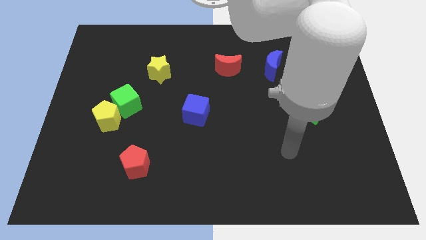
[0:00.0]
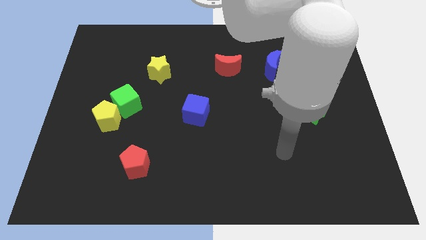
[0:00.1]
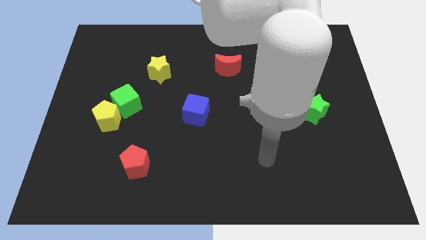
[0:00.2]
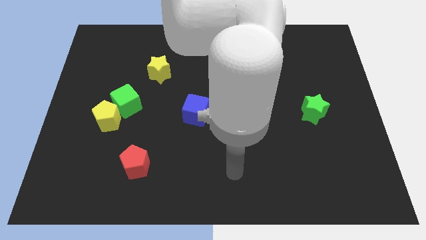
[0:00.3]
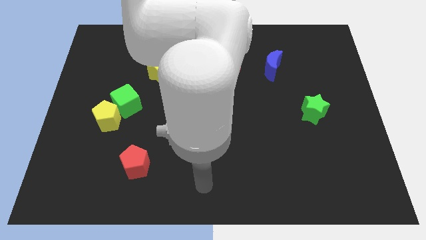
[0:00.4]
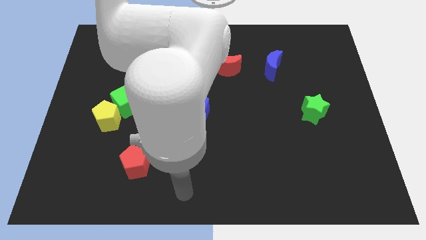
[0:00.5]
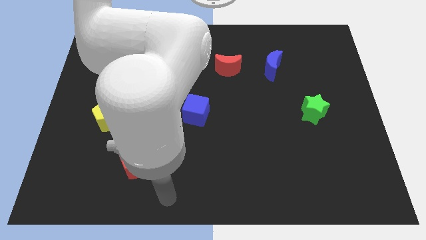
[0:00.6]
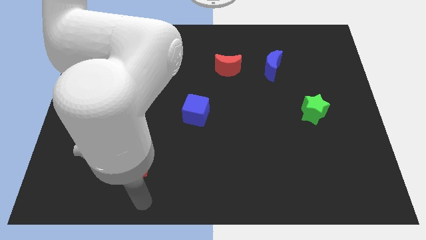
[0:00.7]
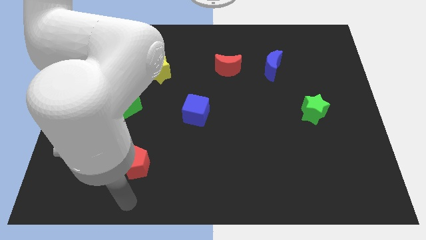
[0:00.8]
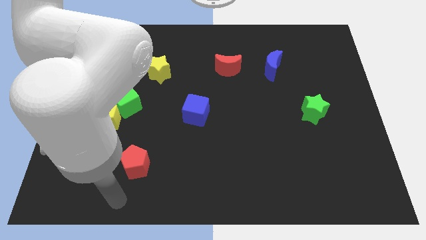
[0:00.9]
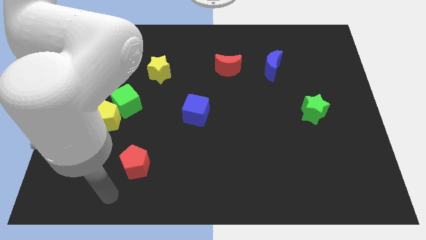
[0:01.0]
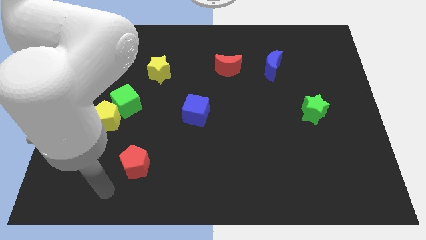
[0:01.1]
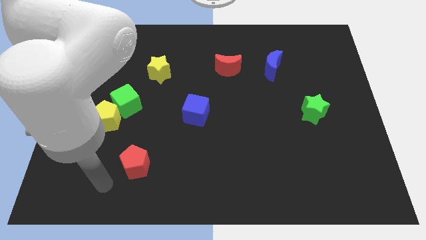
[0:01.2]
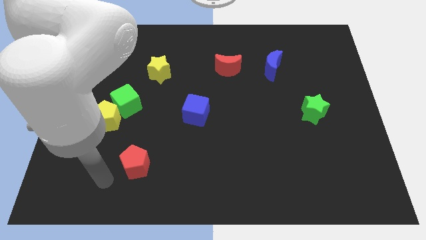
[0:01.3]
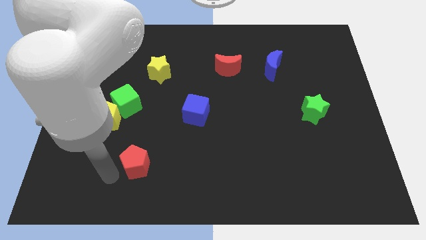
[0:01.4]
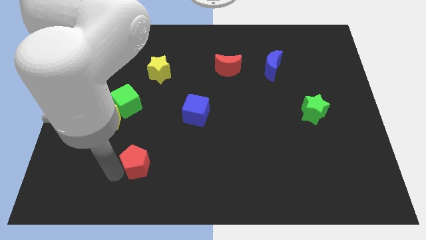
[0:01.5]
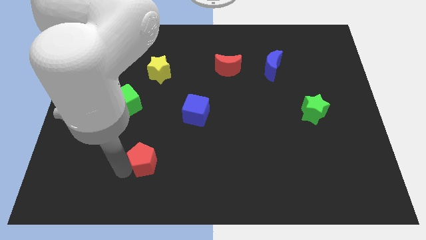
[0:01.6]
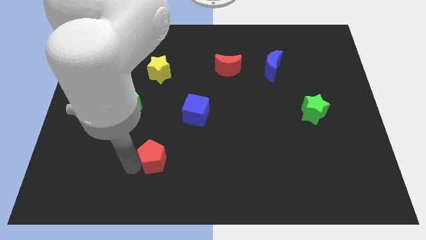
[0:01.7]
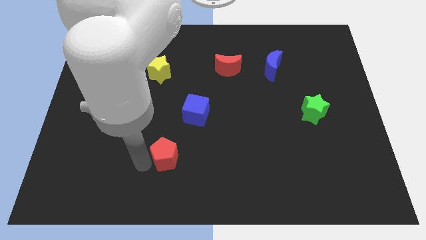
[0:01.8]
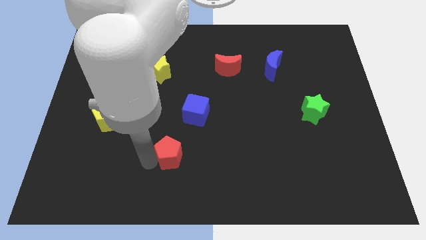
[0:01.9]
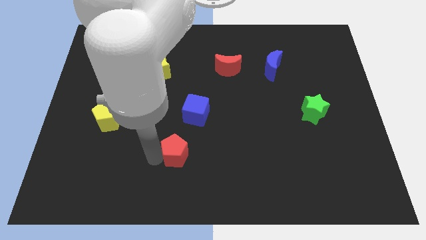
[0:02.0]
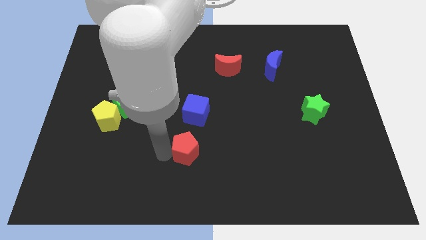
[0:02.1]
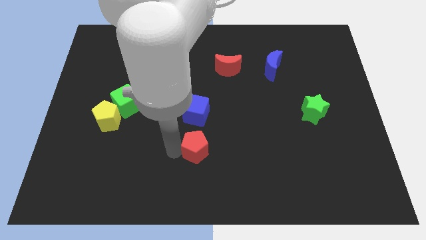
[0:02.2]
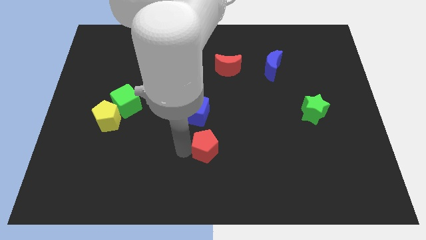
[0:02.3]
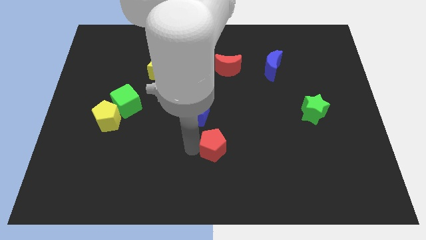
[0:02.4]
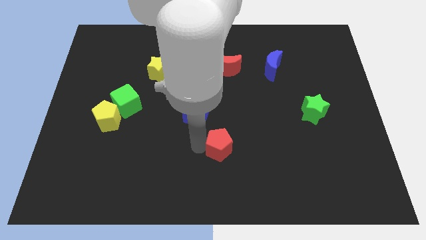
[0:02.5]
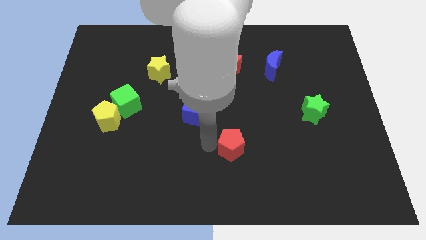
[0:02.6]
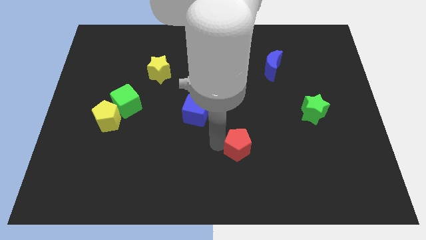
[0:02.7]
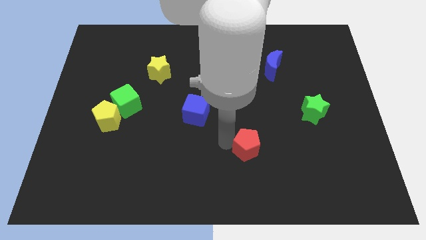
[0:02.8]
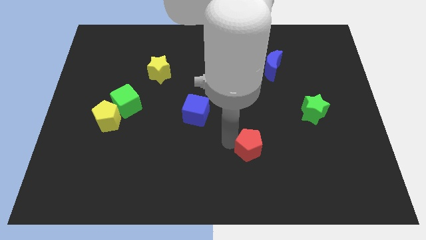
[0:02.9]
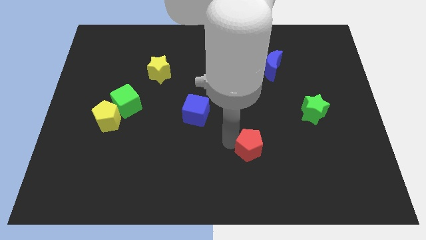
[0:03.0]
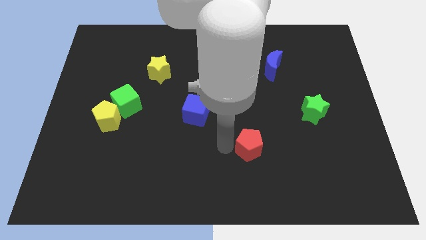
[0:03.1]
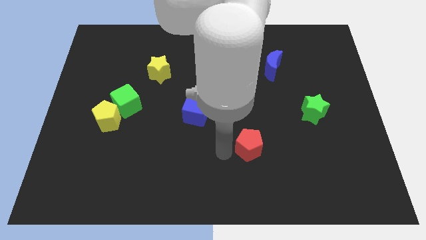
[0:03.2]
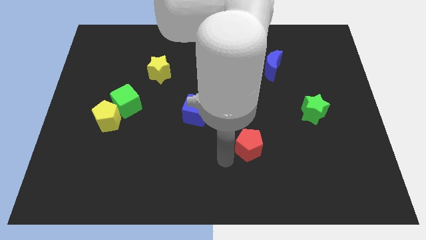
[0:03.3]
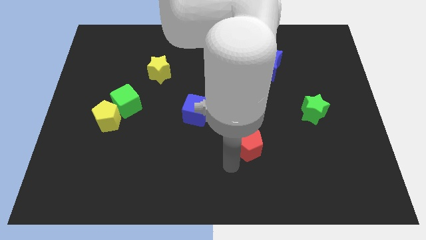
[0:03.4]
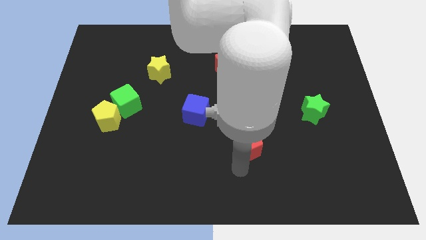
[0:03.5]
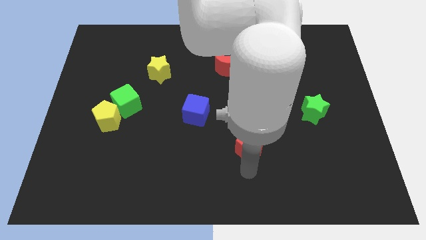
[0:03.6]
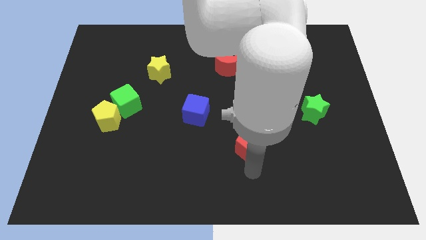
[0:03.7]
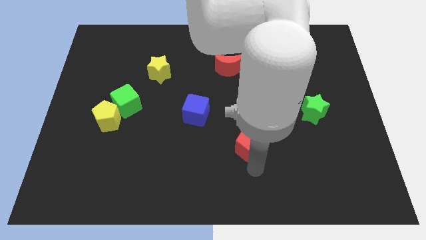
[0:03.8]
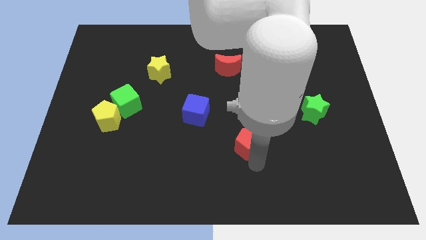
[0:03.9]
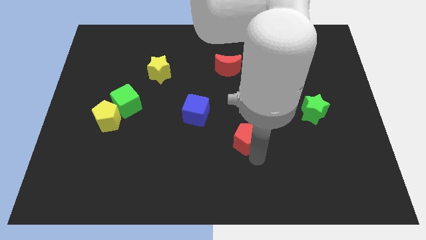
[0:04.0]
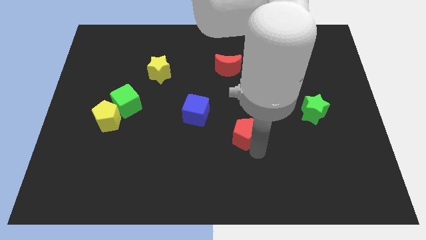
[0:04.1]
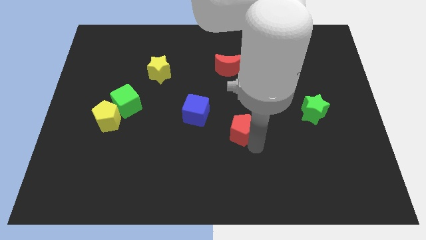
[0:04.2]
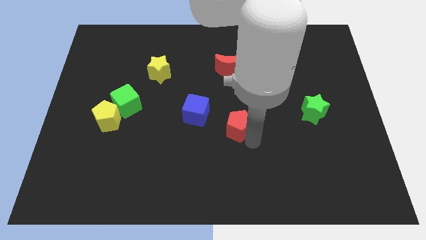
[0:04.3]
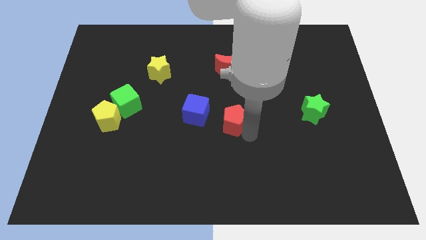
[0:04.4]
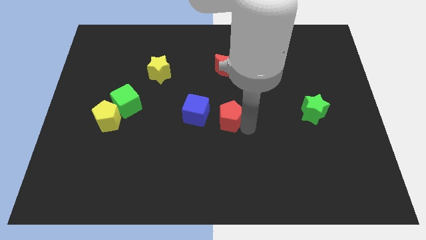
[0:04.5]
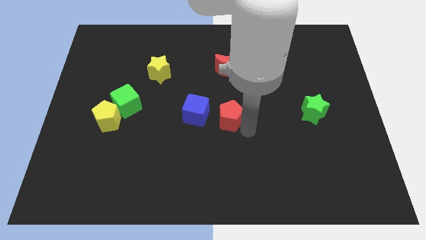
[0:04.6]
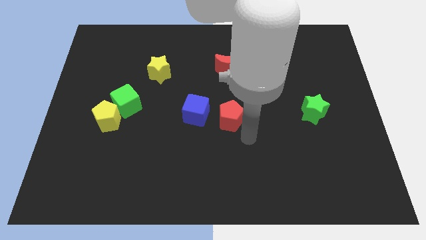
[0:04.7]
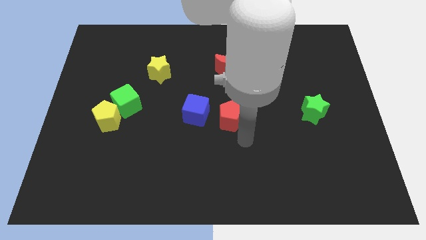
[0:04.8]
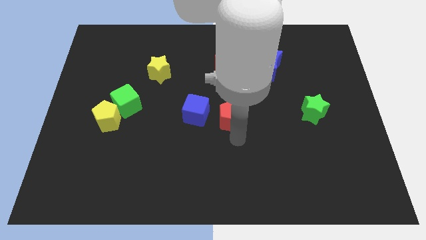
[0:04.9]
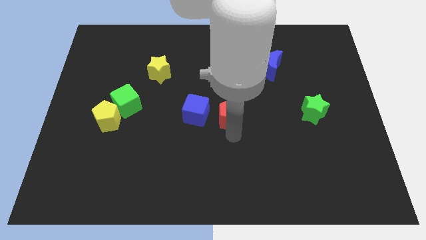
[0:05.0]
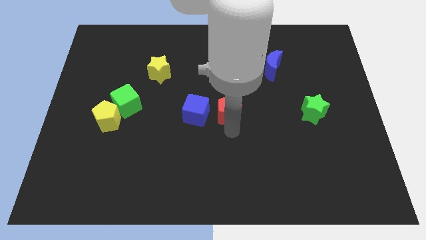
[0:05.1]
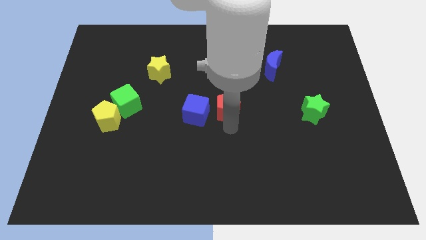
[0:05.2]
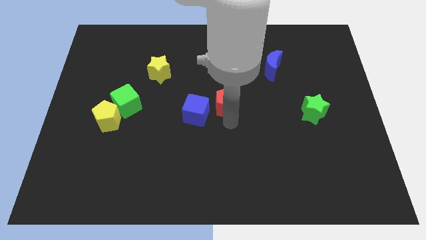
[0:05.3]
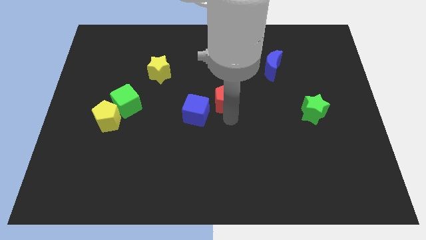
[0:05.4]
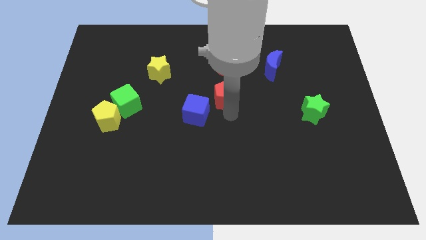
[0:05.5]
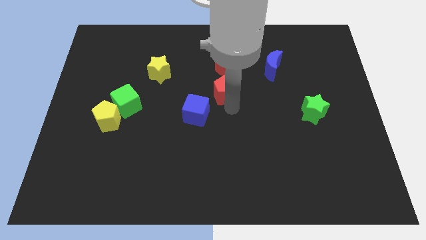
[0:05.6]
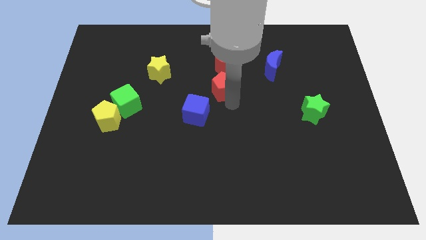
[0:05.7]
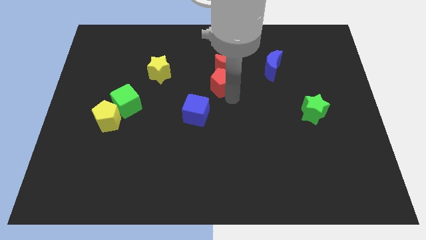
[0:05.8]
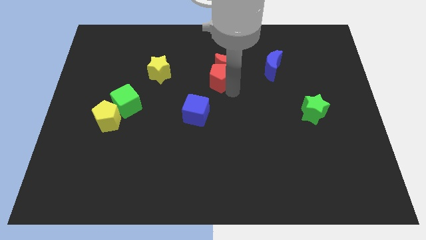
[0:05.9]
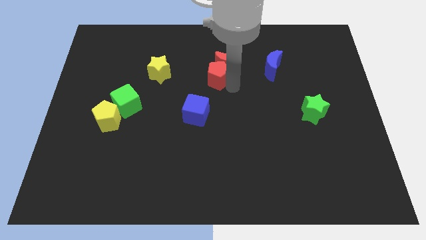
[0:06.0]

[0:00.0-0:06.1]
put the red pentagon next to the red moon

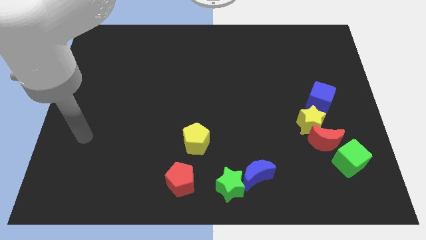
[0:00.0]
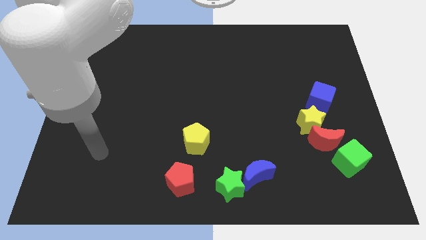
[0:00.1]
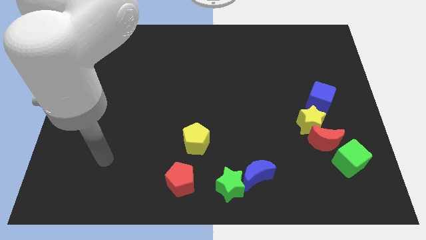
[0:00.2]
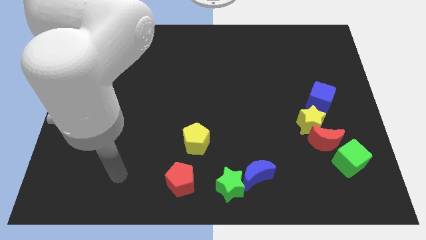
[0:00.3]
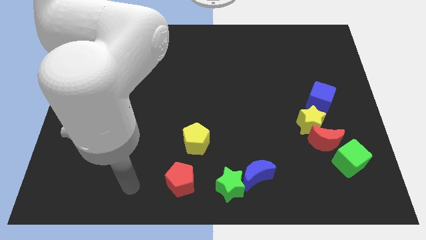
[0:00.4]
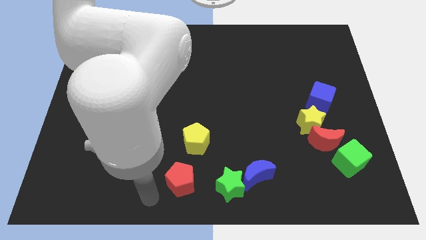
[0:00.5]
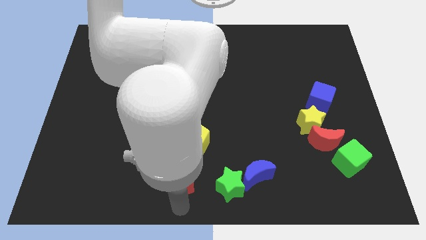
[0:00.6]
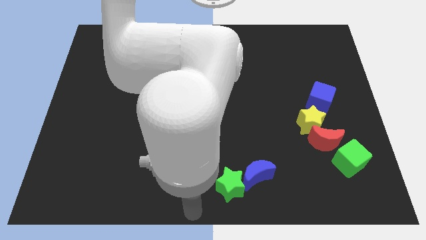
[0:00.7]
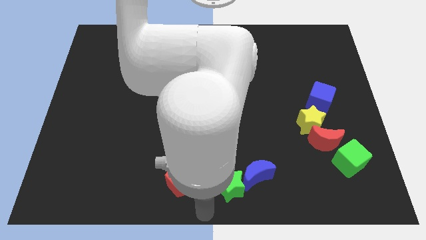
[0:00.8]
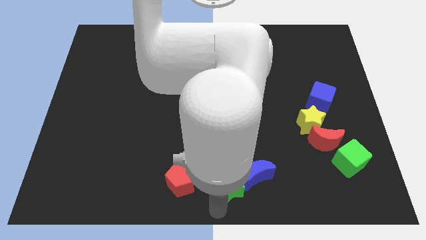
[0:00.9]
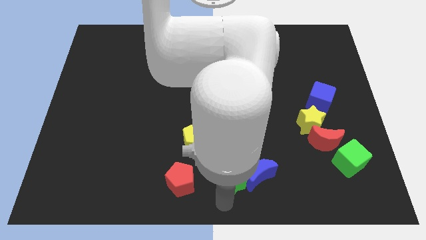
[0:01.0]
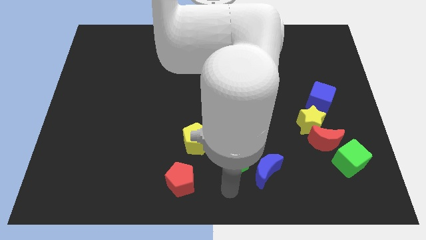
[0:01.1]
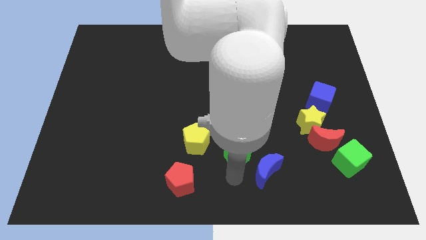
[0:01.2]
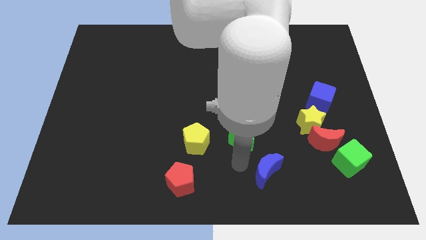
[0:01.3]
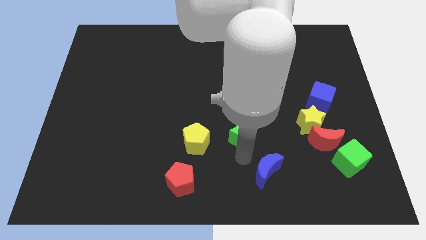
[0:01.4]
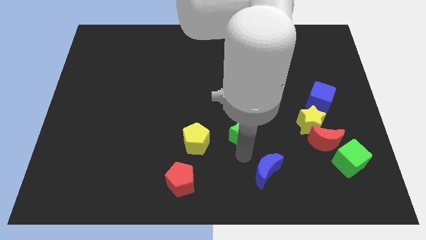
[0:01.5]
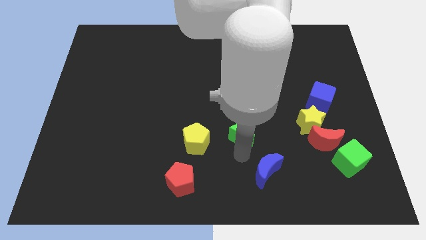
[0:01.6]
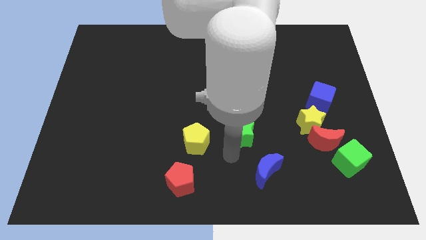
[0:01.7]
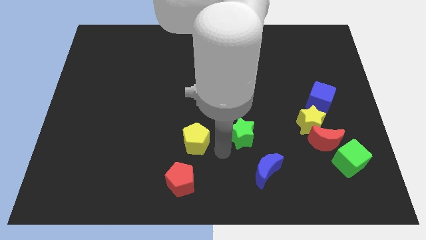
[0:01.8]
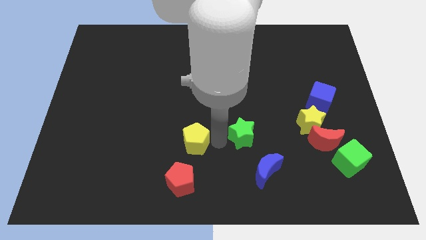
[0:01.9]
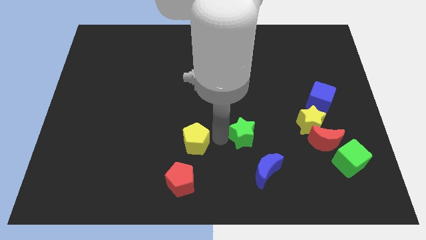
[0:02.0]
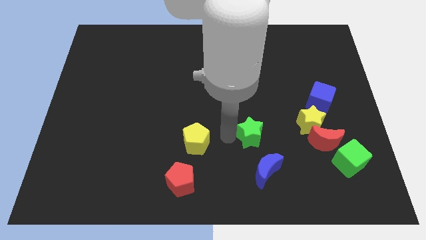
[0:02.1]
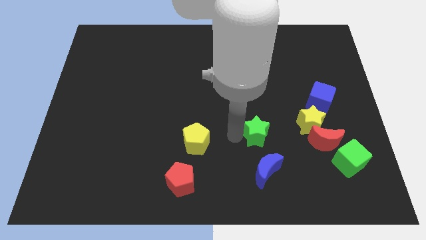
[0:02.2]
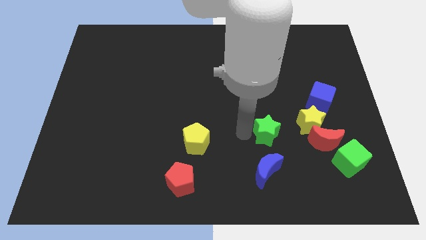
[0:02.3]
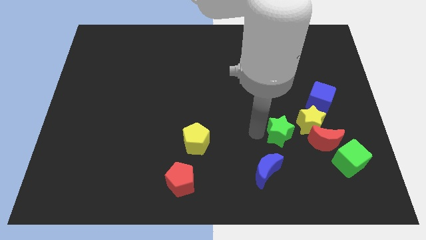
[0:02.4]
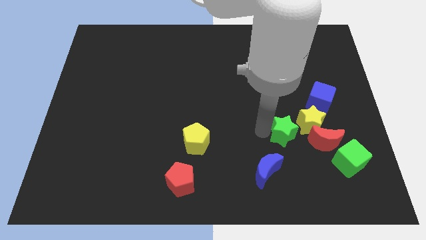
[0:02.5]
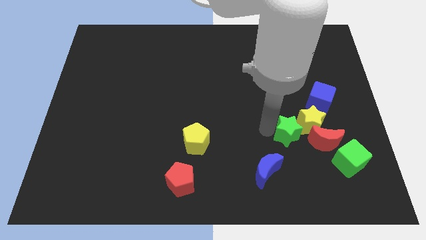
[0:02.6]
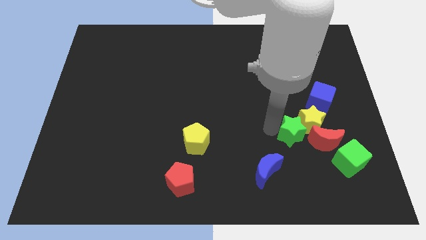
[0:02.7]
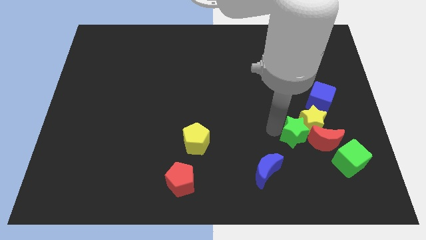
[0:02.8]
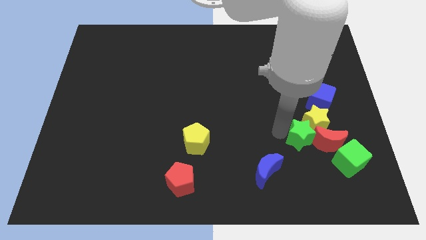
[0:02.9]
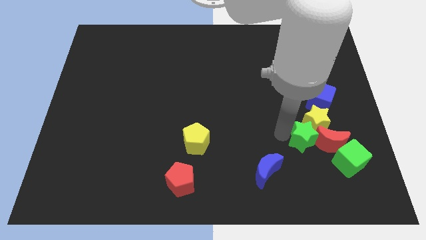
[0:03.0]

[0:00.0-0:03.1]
push the green star next to the red moon
